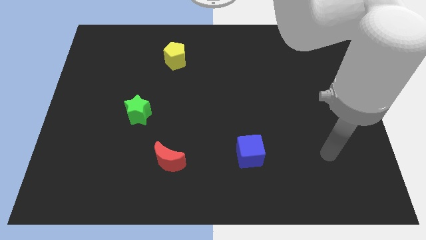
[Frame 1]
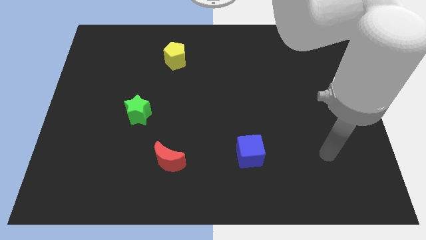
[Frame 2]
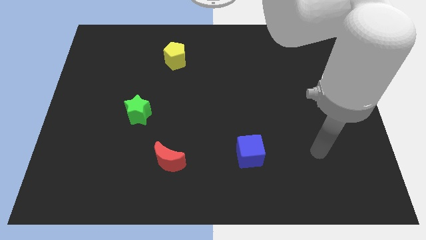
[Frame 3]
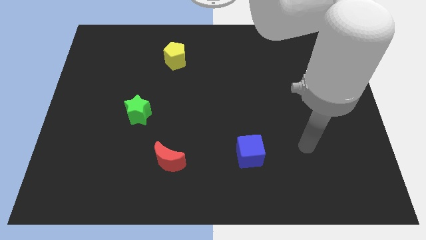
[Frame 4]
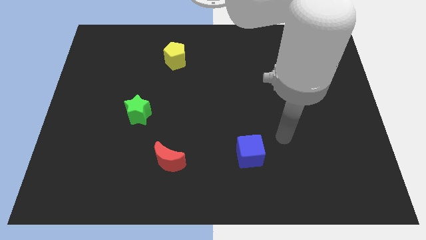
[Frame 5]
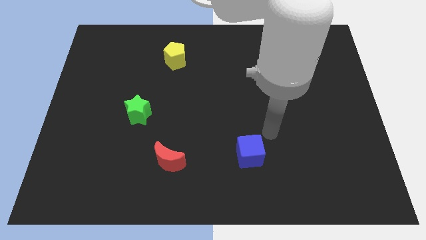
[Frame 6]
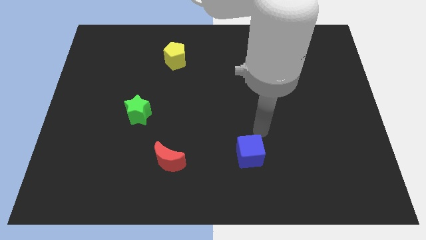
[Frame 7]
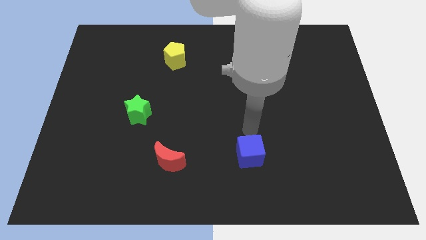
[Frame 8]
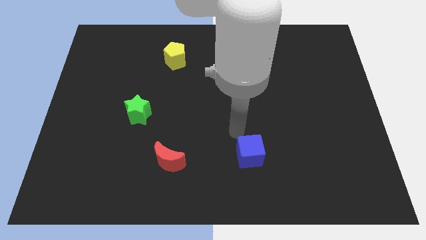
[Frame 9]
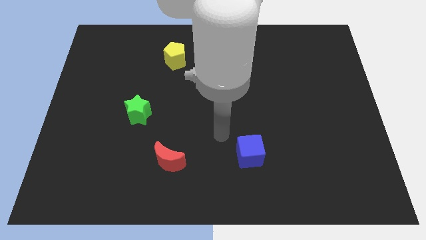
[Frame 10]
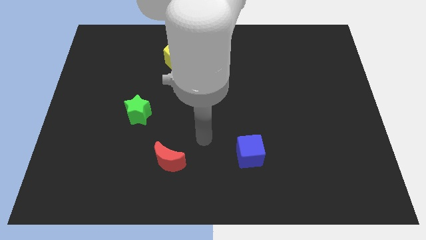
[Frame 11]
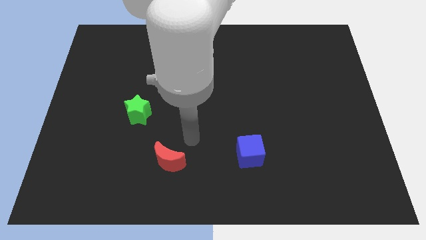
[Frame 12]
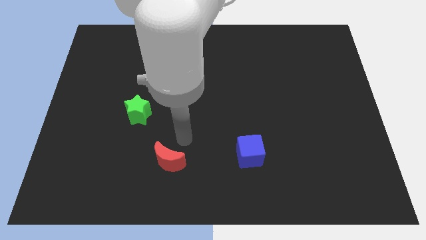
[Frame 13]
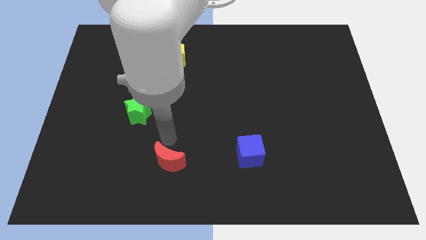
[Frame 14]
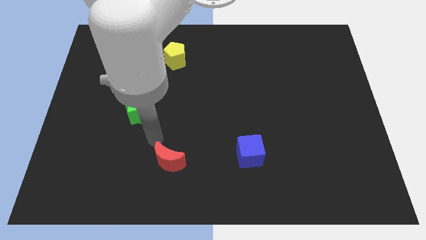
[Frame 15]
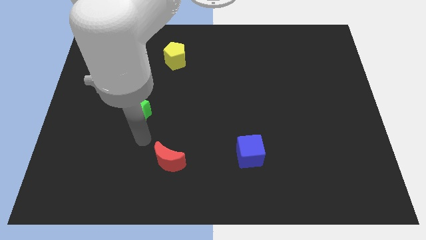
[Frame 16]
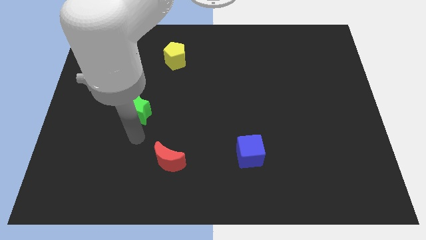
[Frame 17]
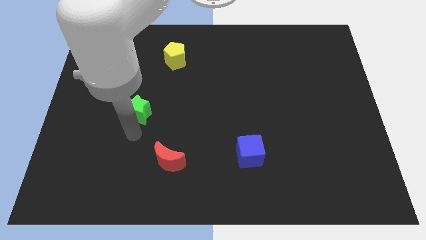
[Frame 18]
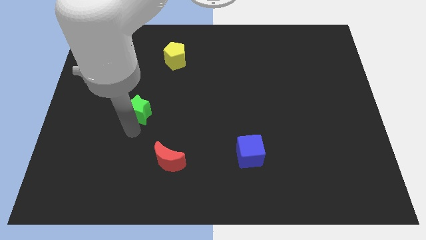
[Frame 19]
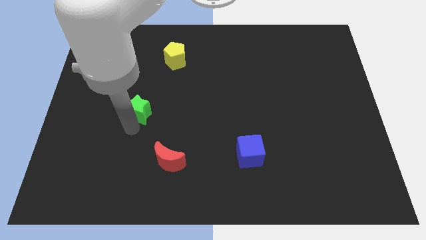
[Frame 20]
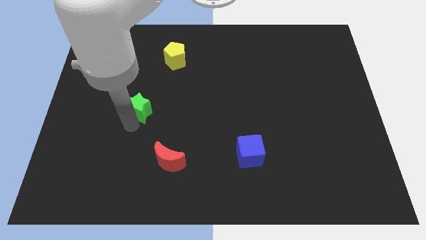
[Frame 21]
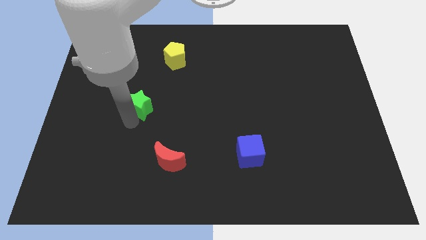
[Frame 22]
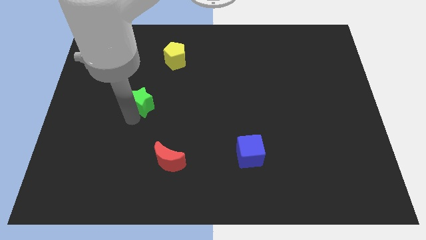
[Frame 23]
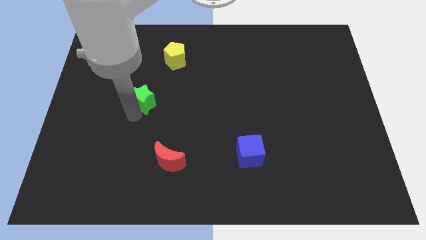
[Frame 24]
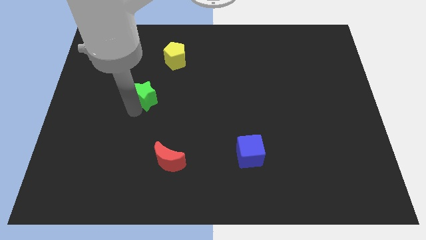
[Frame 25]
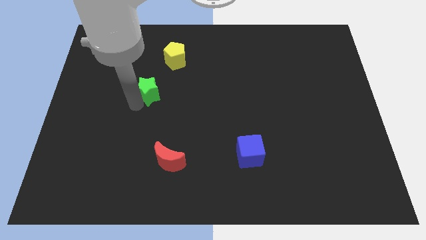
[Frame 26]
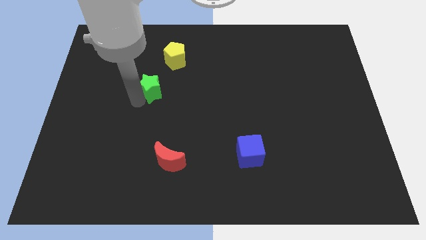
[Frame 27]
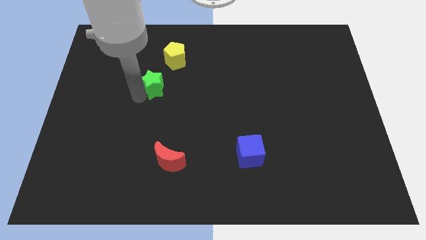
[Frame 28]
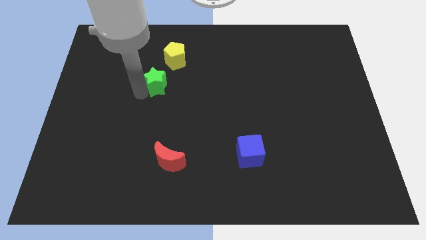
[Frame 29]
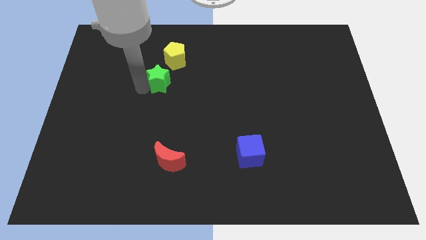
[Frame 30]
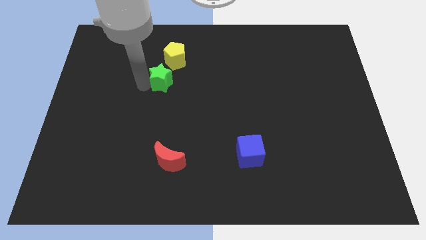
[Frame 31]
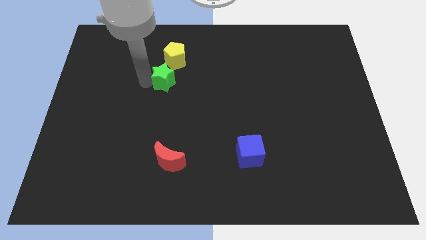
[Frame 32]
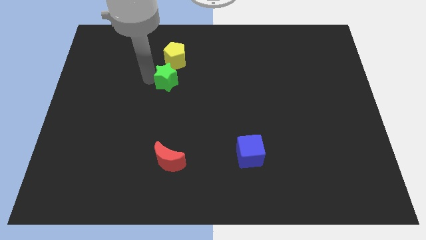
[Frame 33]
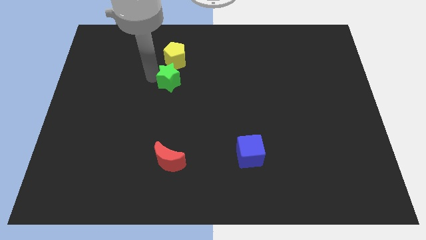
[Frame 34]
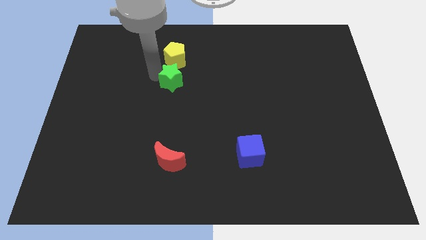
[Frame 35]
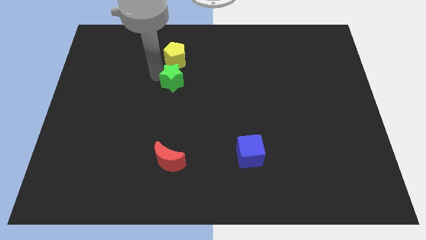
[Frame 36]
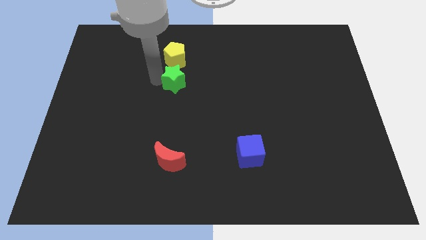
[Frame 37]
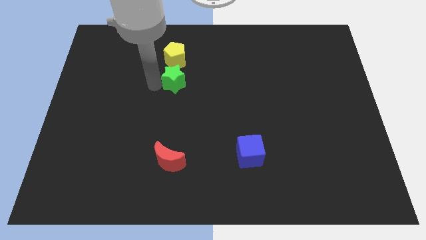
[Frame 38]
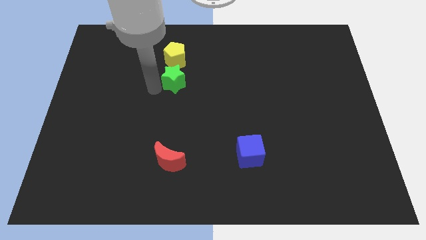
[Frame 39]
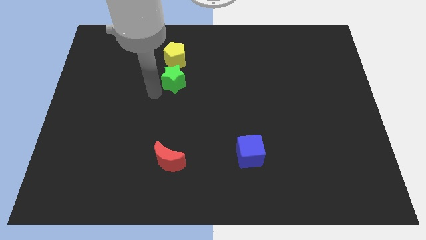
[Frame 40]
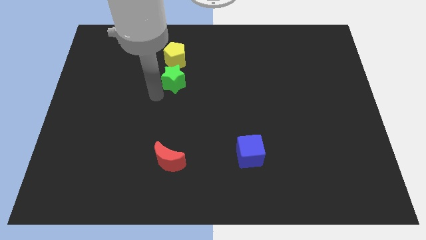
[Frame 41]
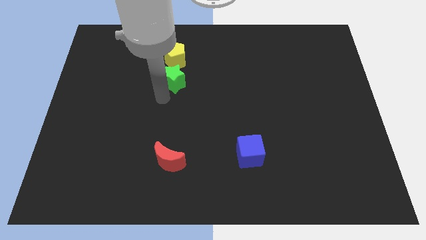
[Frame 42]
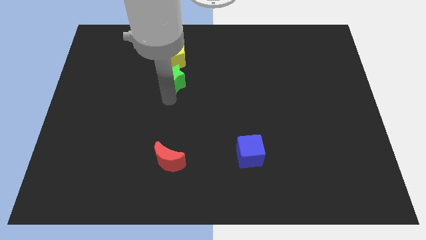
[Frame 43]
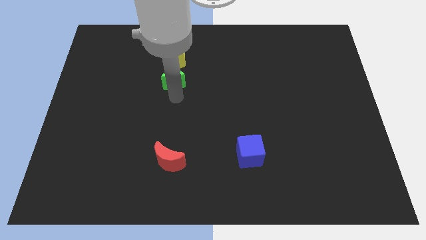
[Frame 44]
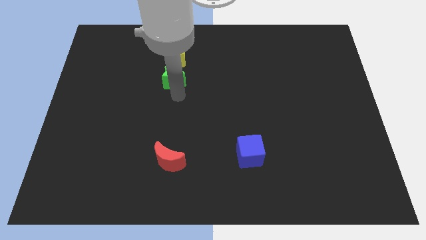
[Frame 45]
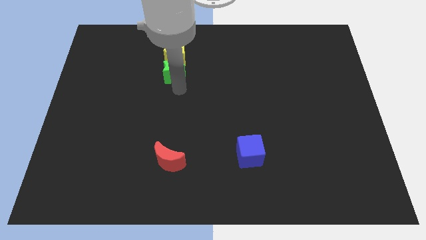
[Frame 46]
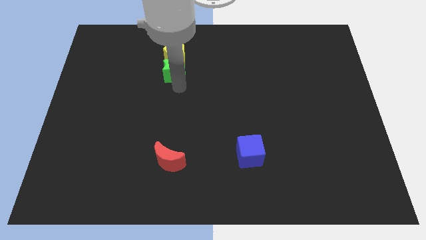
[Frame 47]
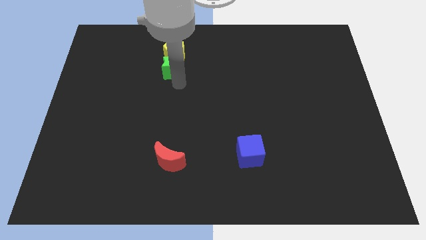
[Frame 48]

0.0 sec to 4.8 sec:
put the star to the pentagon

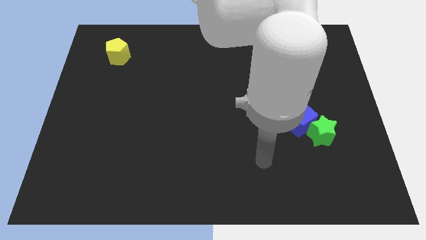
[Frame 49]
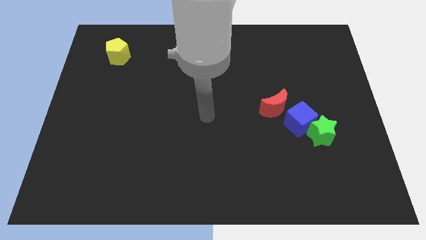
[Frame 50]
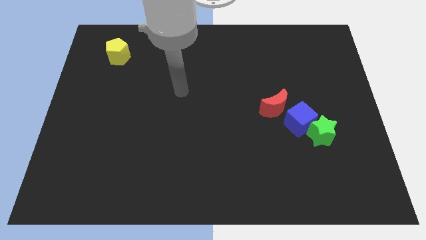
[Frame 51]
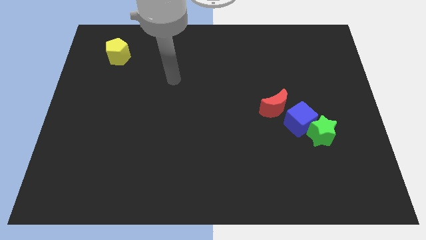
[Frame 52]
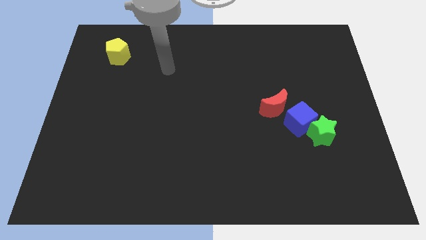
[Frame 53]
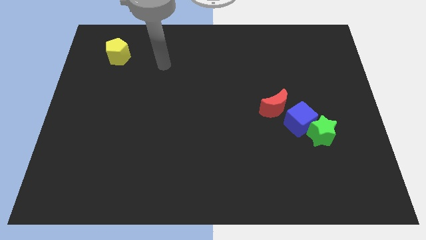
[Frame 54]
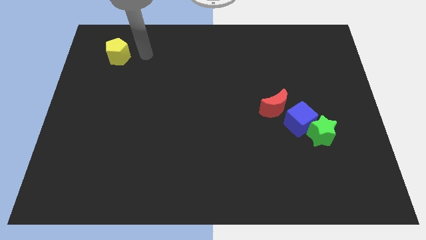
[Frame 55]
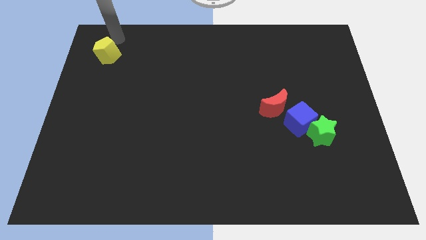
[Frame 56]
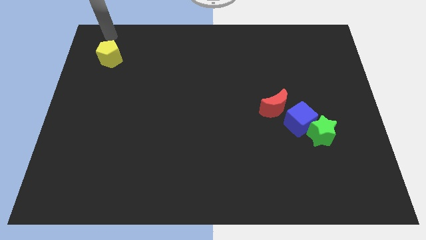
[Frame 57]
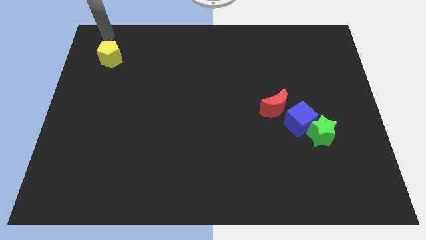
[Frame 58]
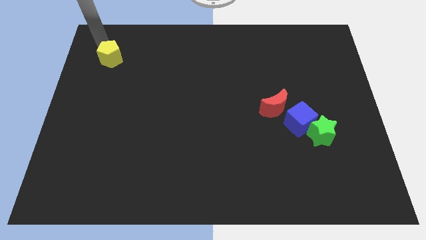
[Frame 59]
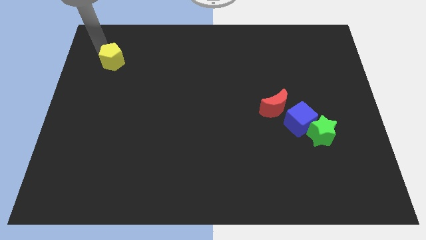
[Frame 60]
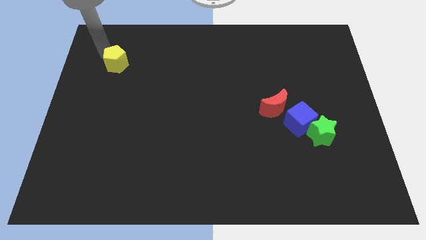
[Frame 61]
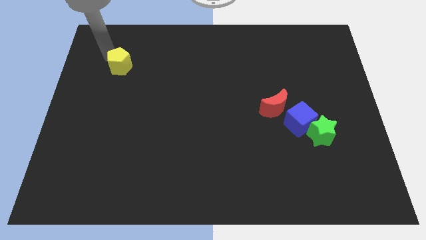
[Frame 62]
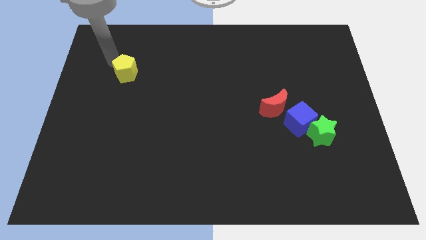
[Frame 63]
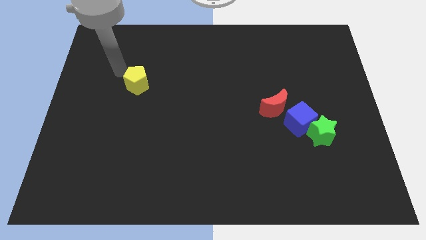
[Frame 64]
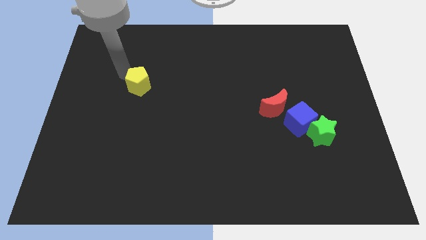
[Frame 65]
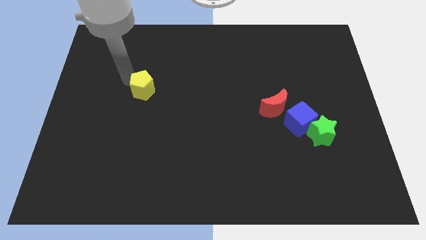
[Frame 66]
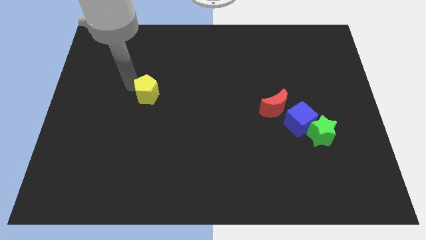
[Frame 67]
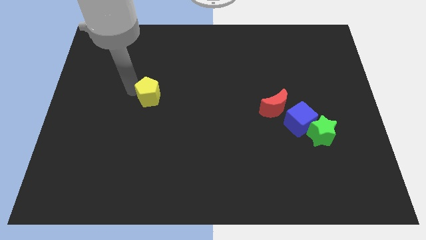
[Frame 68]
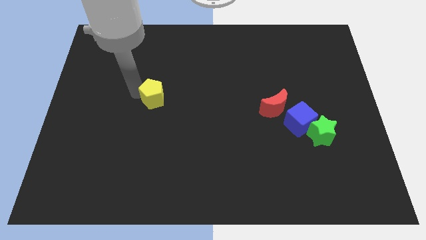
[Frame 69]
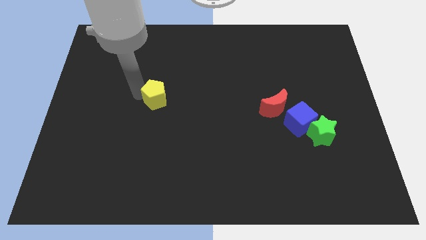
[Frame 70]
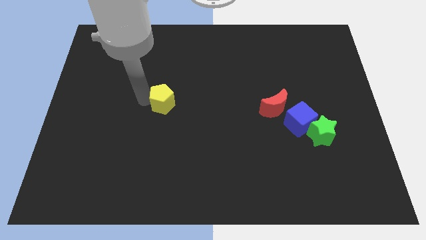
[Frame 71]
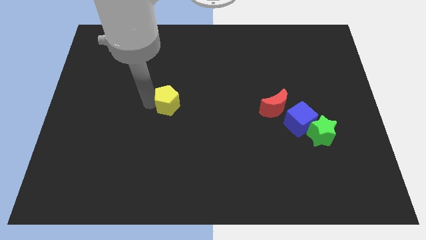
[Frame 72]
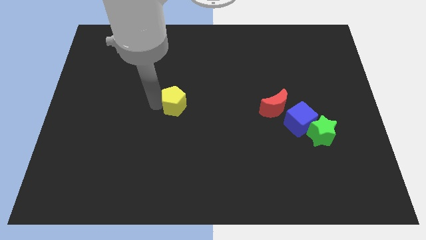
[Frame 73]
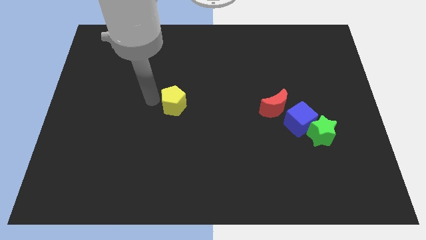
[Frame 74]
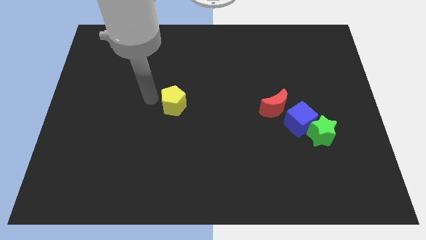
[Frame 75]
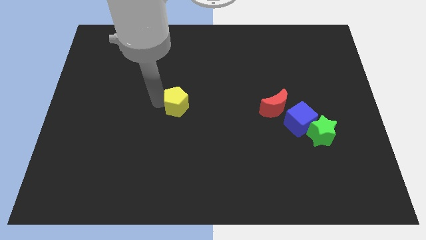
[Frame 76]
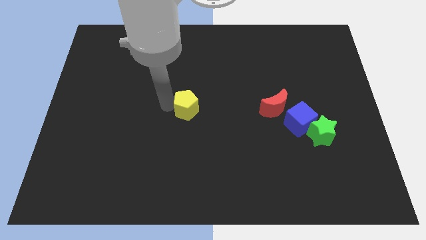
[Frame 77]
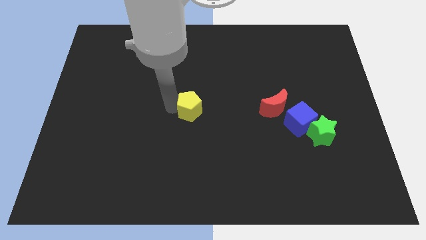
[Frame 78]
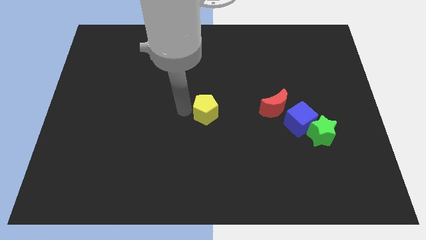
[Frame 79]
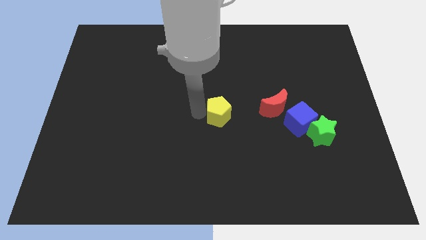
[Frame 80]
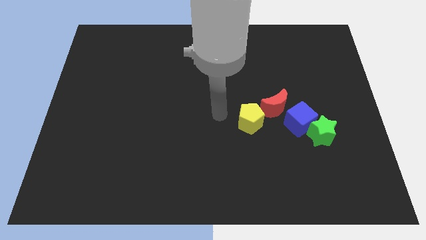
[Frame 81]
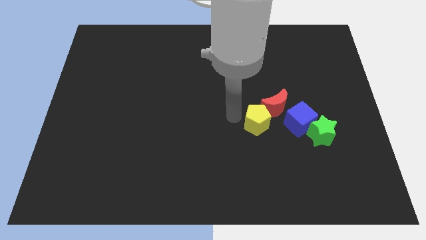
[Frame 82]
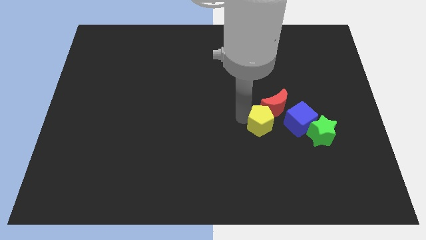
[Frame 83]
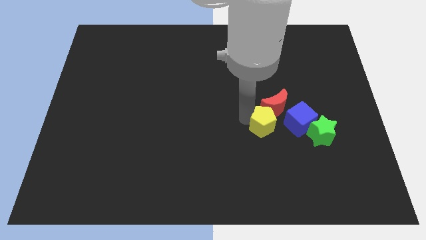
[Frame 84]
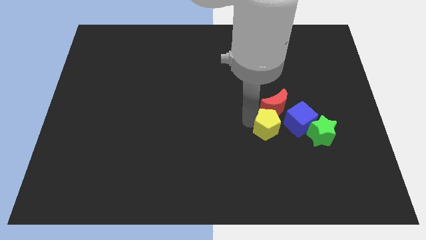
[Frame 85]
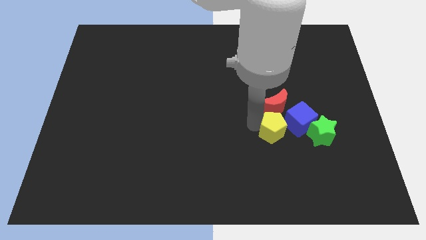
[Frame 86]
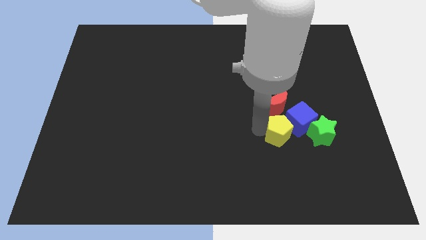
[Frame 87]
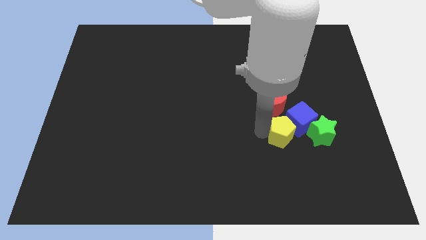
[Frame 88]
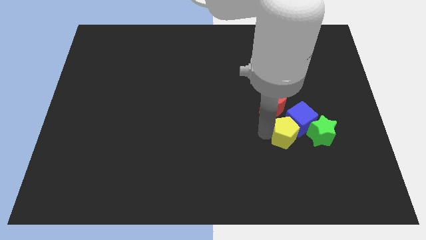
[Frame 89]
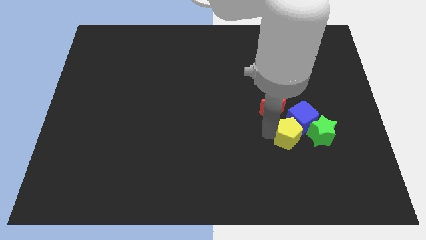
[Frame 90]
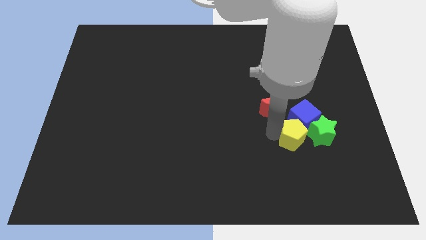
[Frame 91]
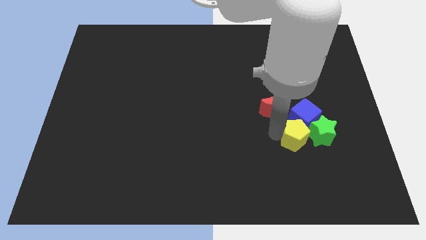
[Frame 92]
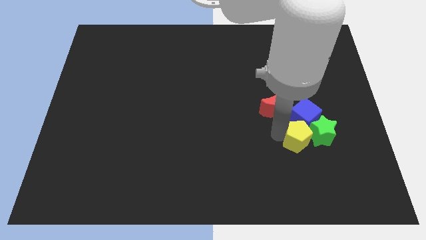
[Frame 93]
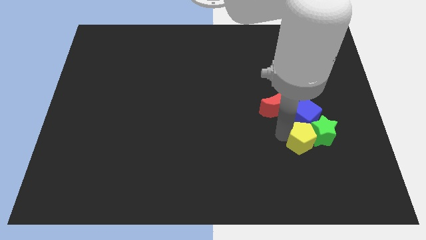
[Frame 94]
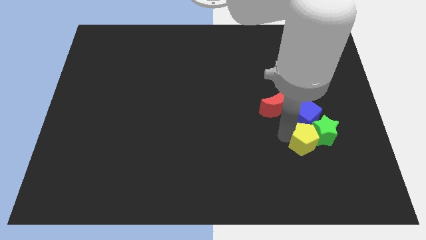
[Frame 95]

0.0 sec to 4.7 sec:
slide the pentagon close to the green block
